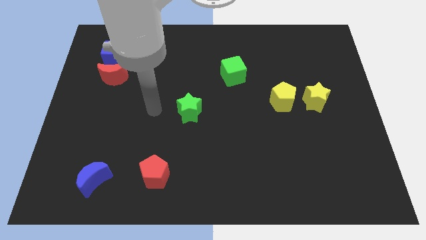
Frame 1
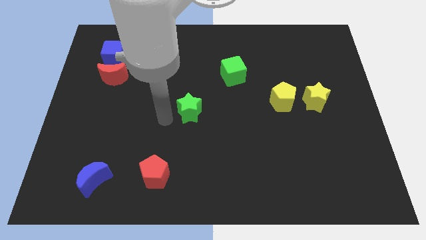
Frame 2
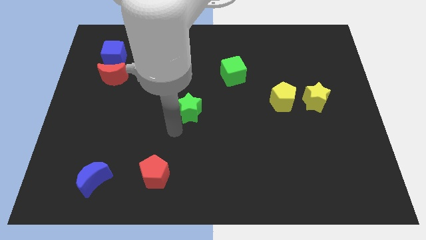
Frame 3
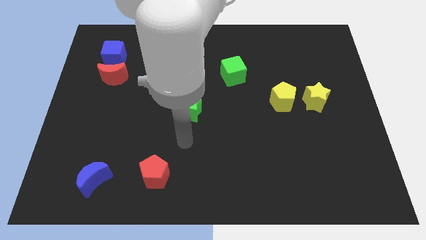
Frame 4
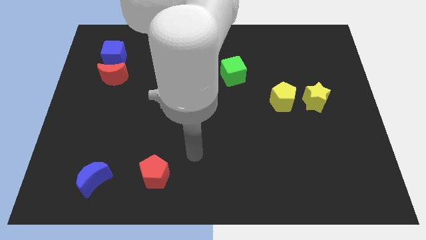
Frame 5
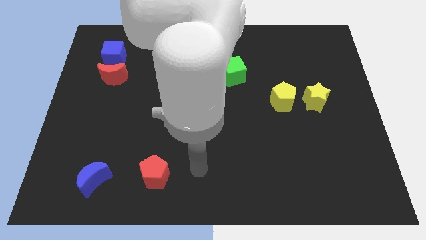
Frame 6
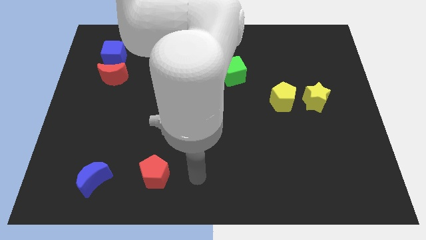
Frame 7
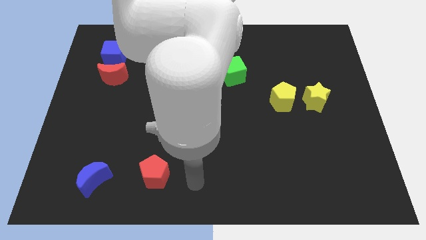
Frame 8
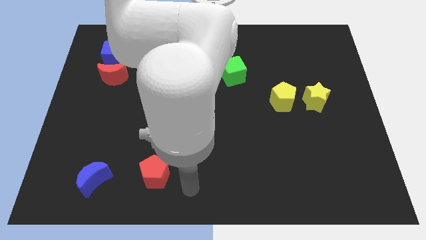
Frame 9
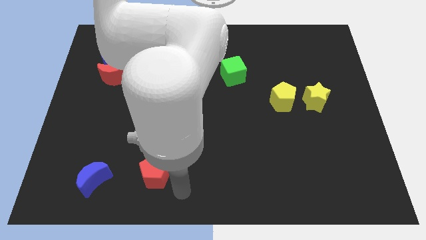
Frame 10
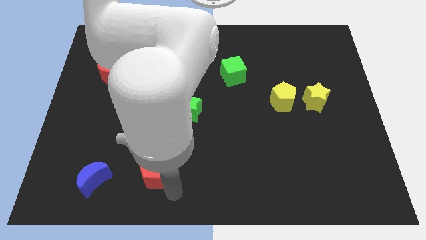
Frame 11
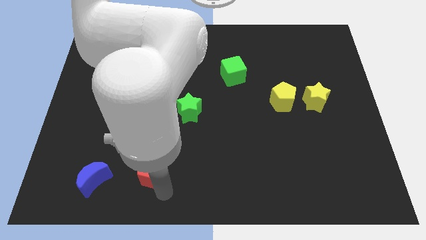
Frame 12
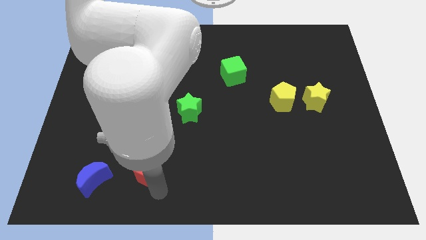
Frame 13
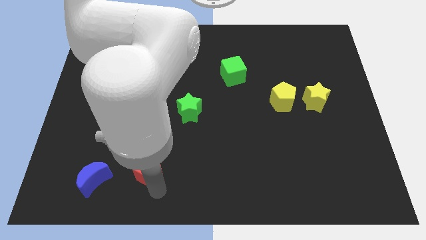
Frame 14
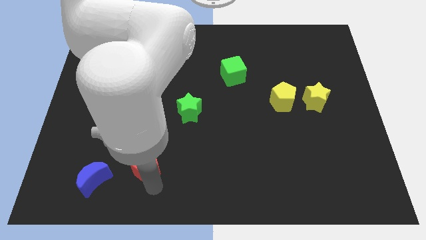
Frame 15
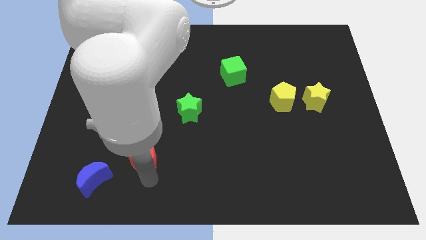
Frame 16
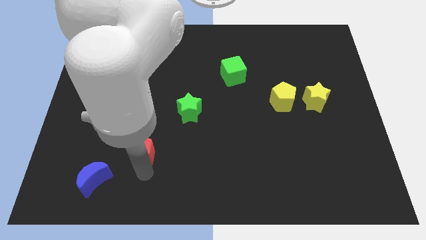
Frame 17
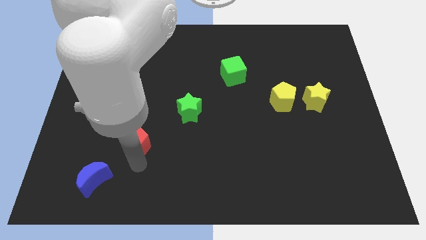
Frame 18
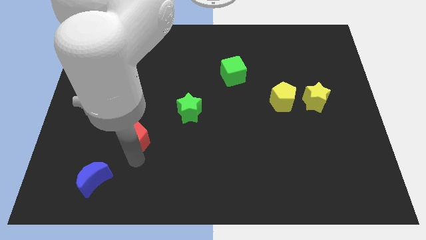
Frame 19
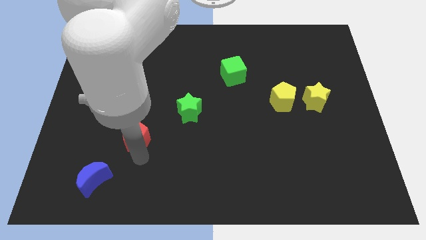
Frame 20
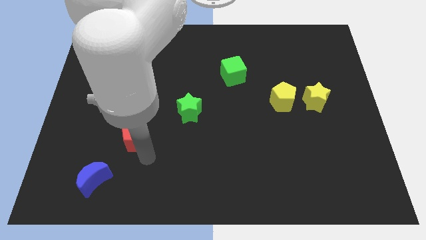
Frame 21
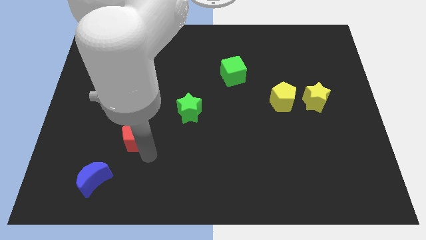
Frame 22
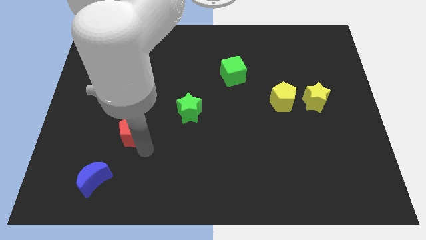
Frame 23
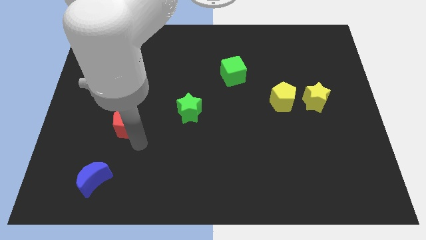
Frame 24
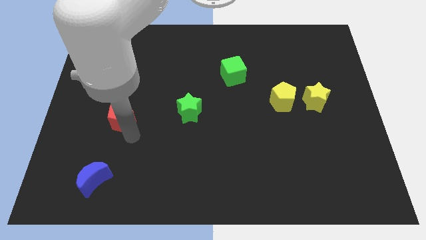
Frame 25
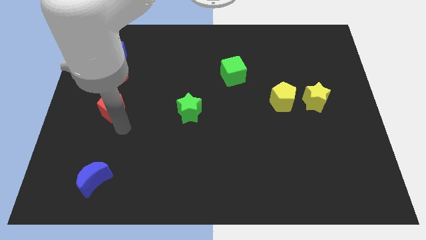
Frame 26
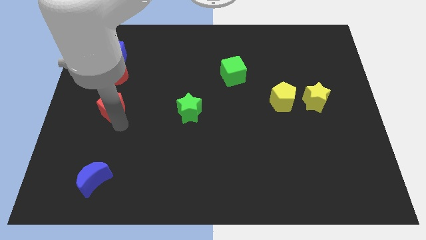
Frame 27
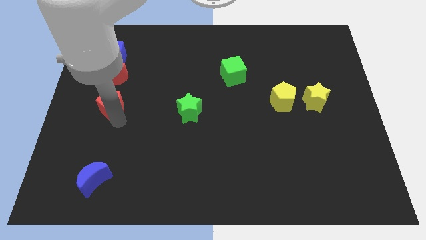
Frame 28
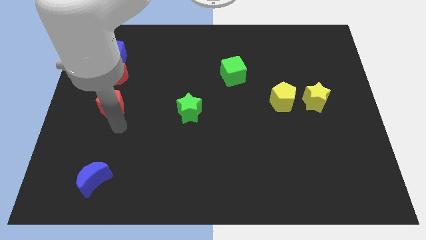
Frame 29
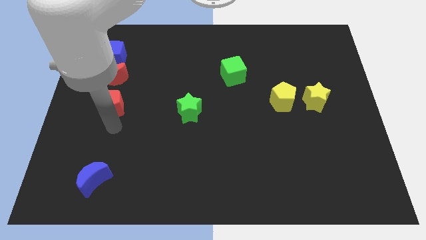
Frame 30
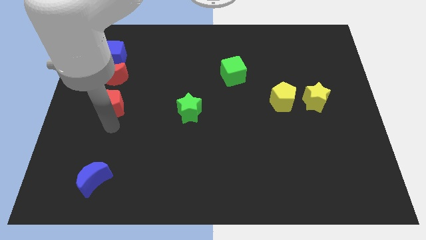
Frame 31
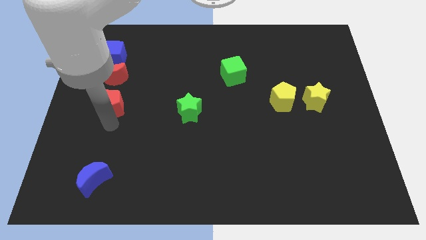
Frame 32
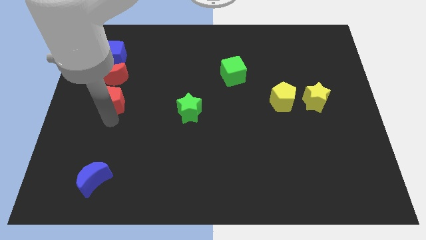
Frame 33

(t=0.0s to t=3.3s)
place the red pentagon at the bottom of red moon

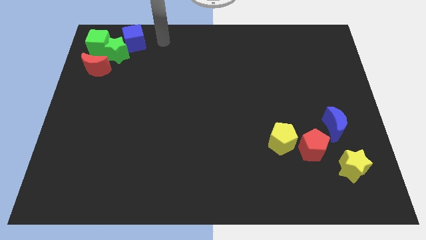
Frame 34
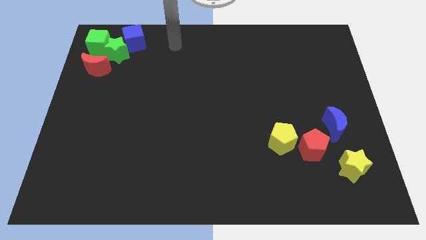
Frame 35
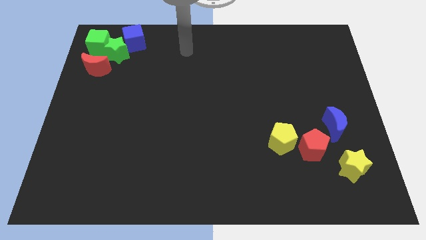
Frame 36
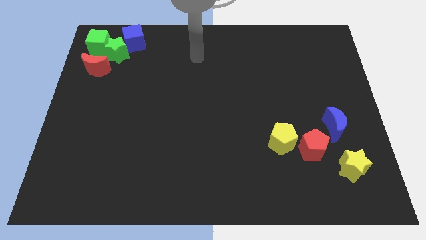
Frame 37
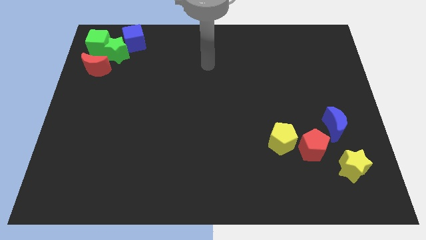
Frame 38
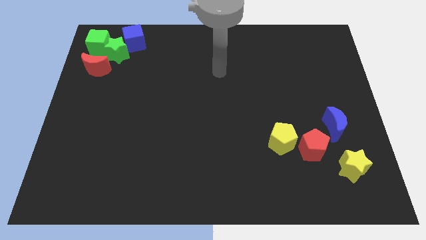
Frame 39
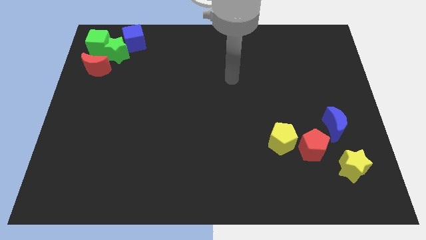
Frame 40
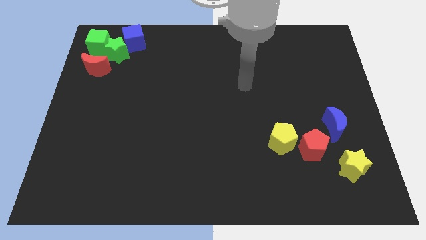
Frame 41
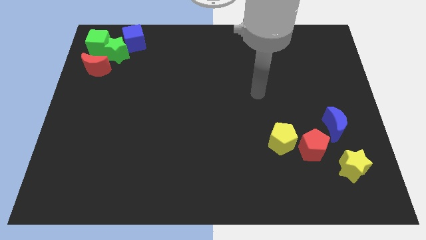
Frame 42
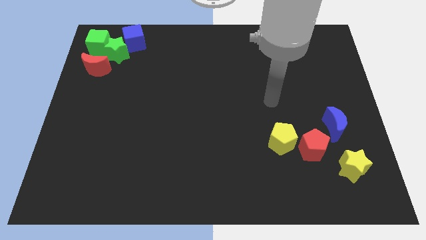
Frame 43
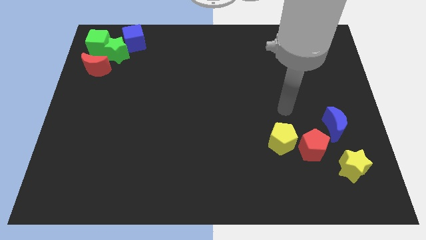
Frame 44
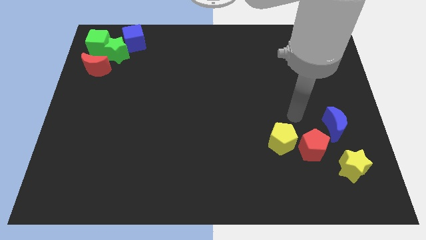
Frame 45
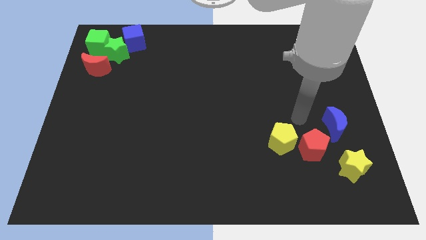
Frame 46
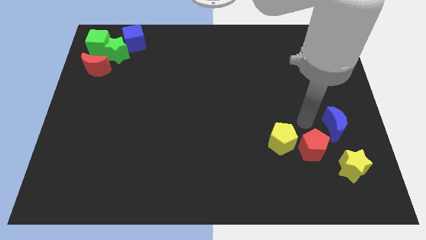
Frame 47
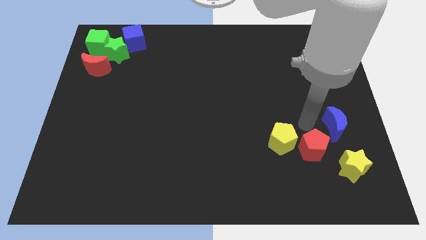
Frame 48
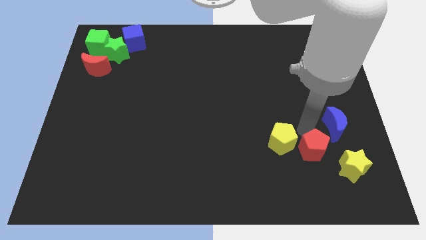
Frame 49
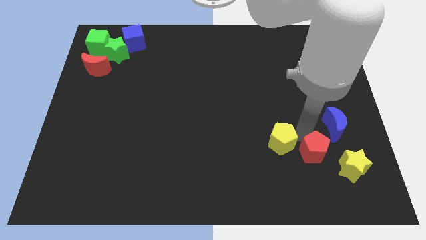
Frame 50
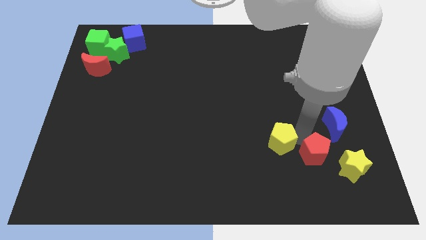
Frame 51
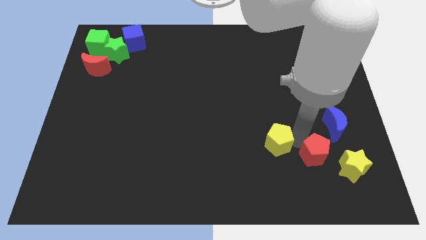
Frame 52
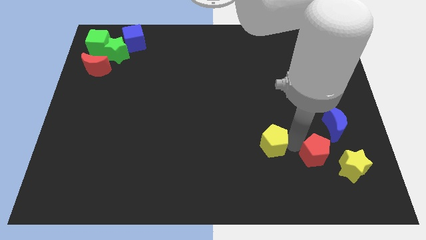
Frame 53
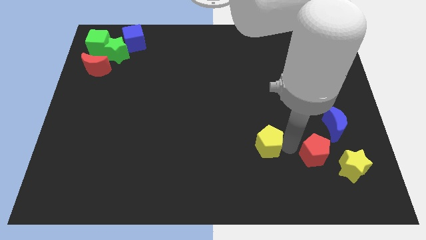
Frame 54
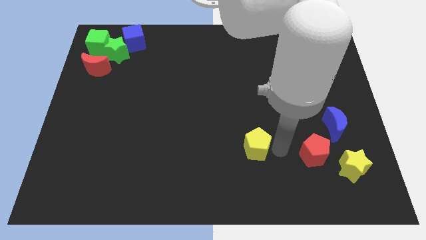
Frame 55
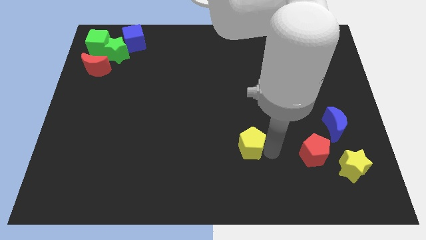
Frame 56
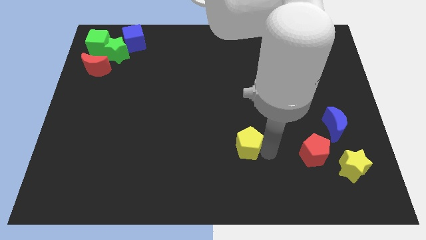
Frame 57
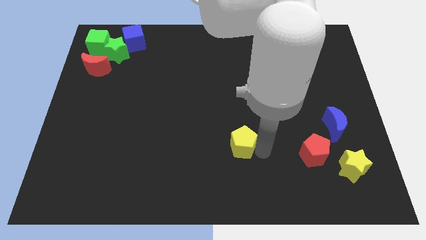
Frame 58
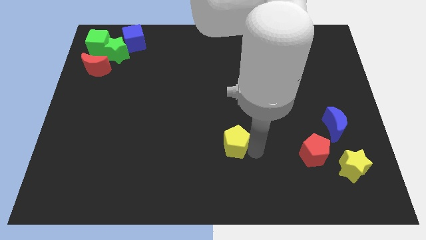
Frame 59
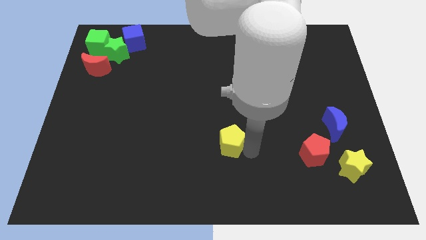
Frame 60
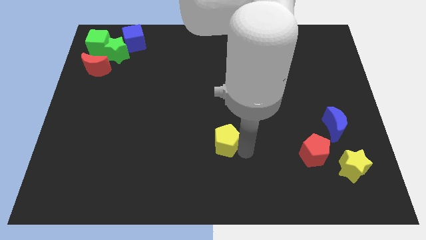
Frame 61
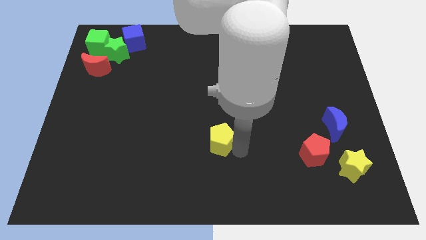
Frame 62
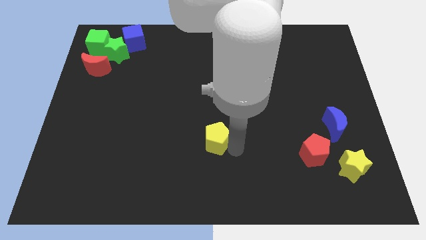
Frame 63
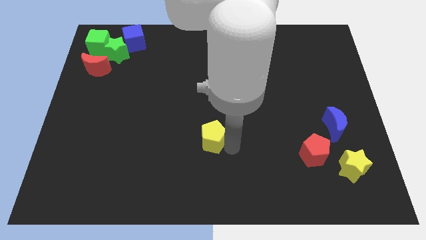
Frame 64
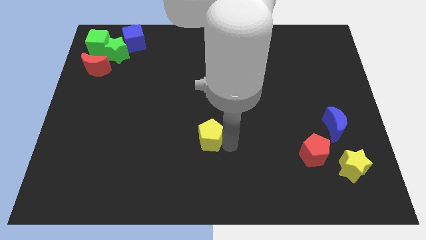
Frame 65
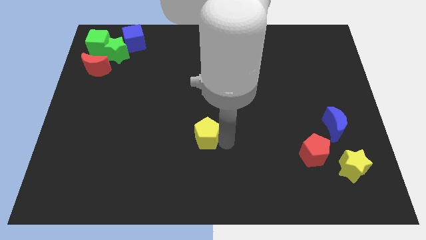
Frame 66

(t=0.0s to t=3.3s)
separate the yellow pentagon from the red pentagon

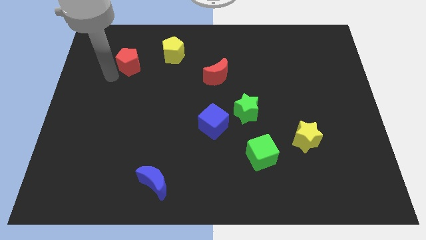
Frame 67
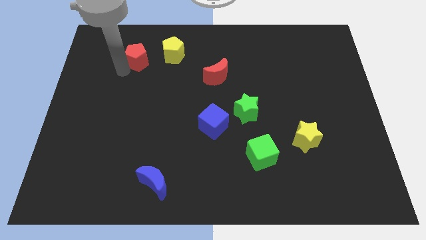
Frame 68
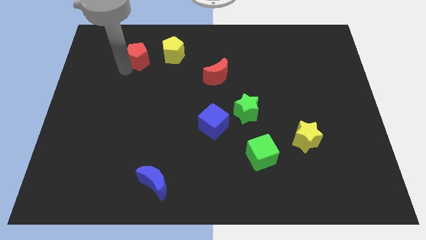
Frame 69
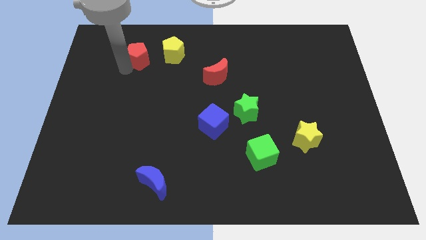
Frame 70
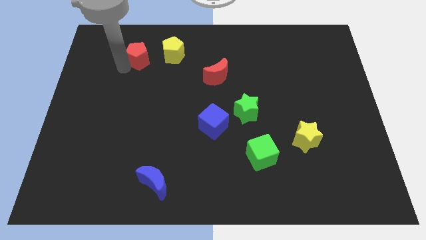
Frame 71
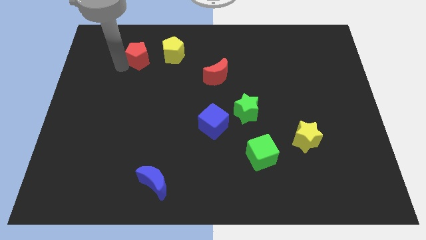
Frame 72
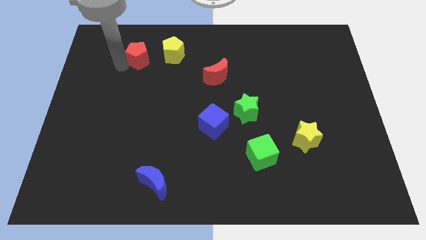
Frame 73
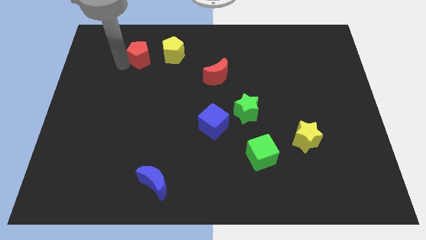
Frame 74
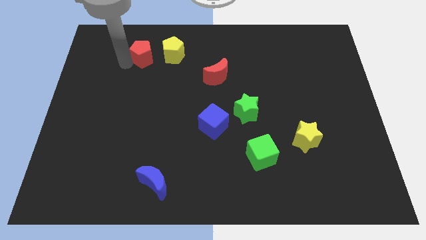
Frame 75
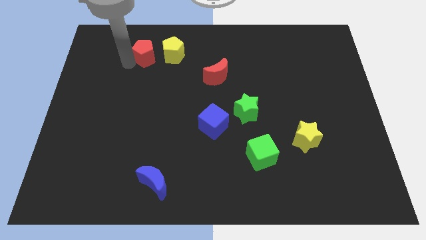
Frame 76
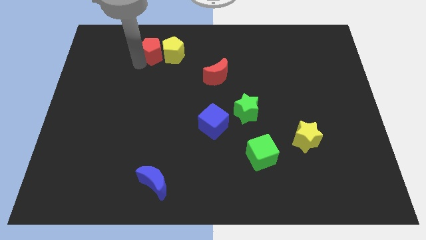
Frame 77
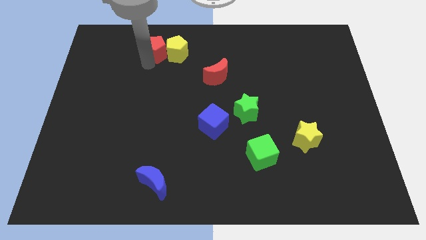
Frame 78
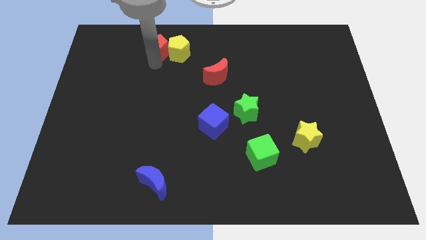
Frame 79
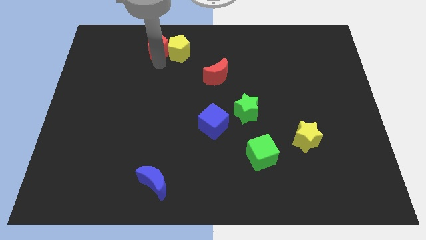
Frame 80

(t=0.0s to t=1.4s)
move the red pentagon into the yellow pentagon

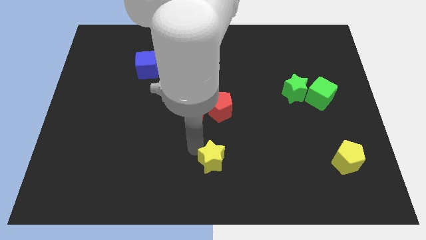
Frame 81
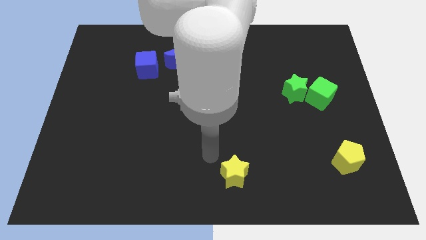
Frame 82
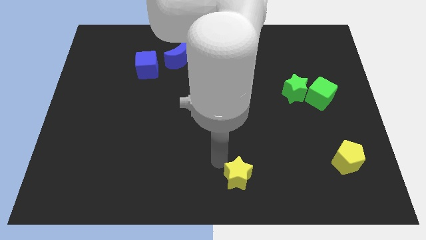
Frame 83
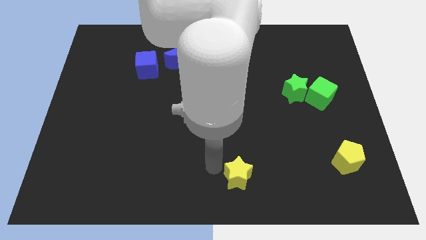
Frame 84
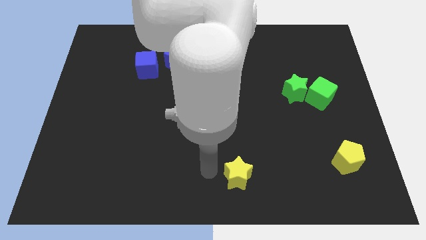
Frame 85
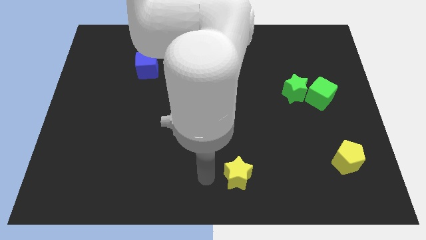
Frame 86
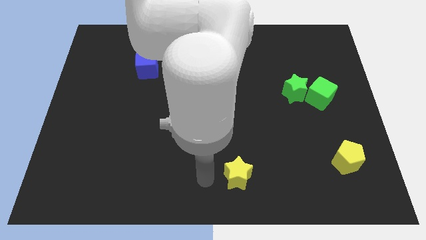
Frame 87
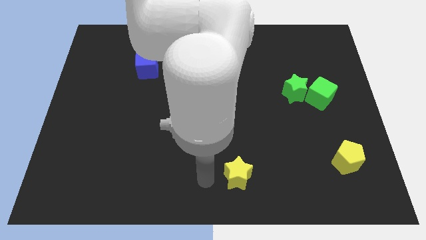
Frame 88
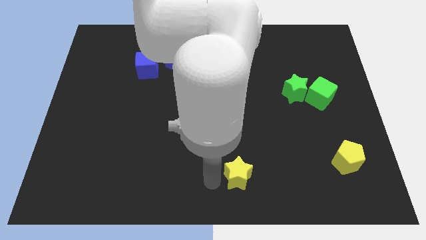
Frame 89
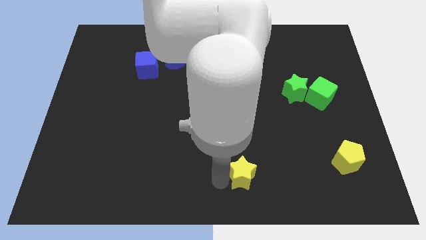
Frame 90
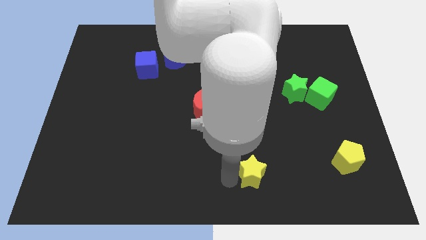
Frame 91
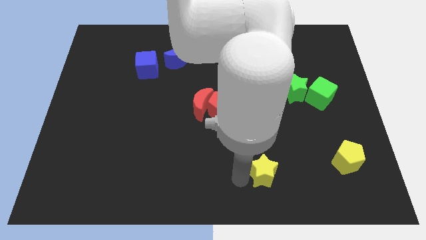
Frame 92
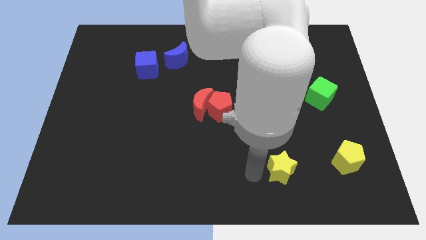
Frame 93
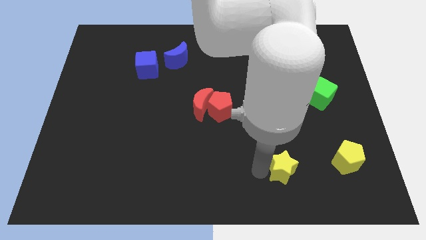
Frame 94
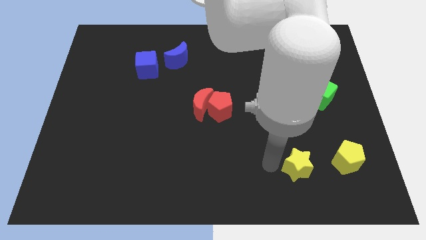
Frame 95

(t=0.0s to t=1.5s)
move the yellow star to the left of the yellow pentagon
